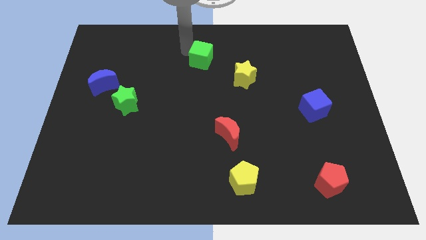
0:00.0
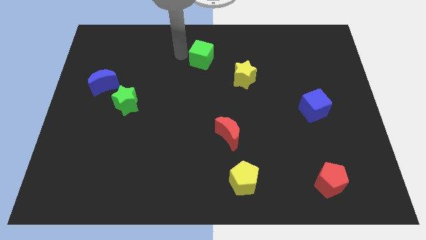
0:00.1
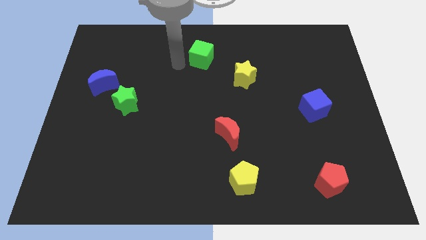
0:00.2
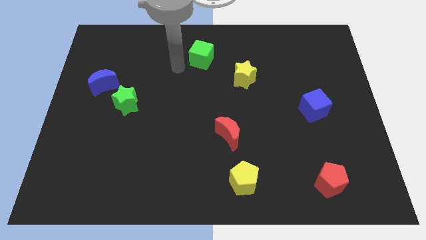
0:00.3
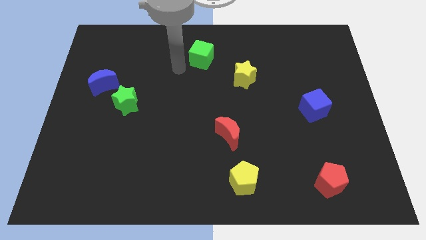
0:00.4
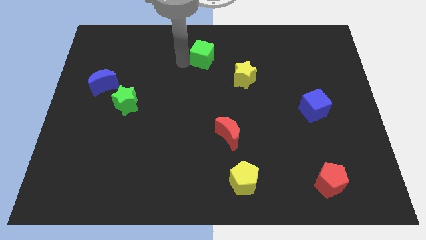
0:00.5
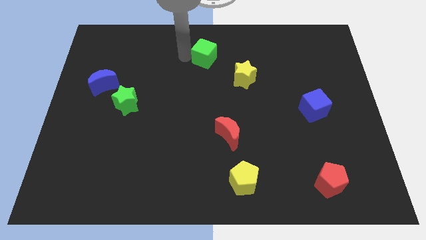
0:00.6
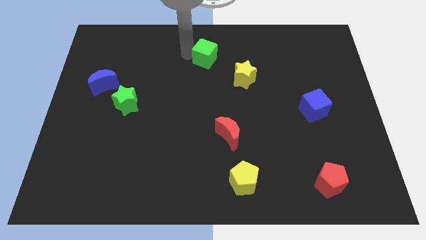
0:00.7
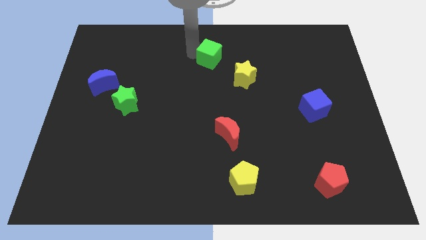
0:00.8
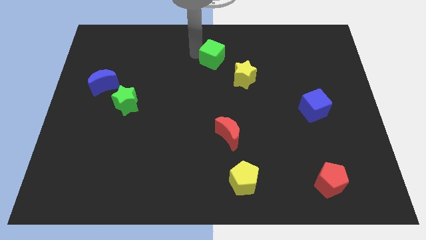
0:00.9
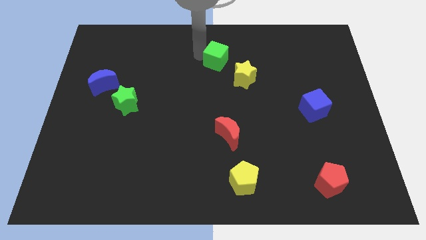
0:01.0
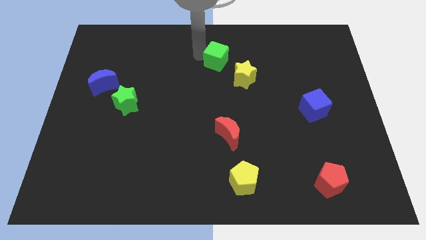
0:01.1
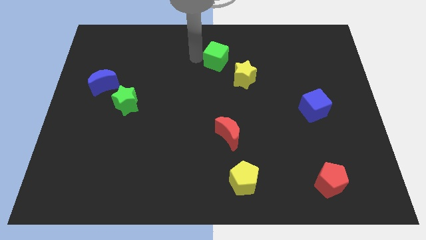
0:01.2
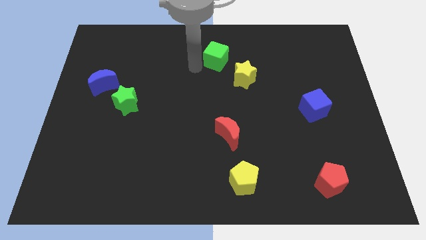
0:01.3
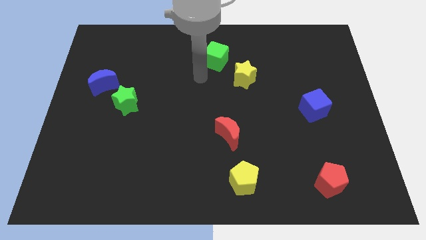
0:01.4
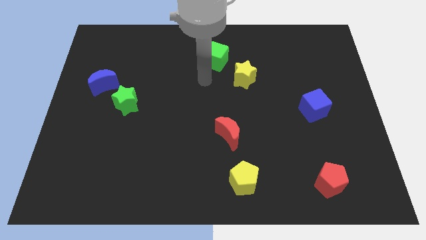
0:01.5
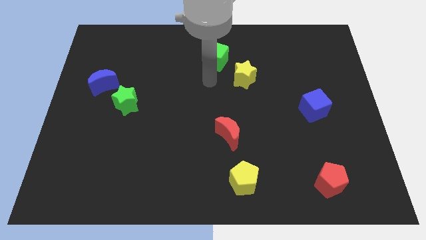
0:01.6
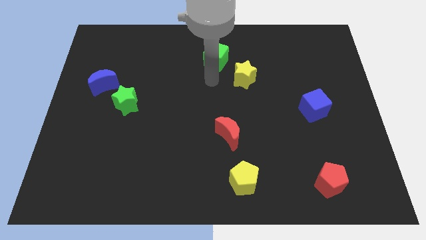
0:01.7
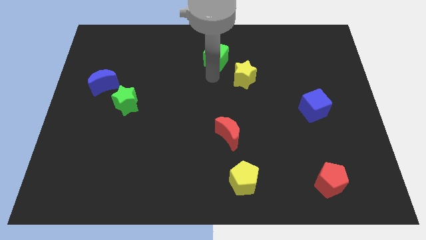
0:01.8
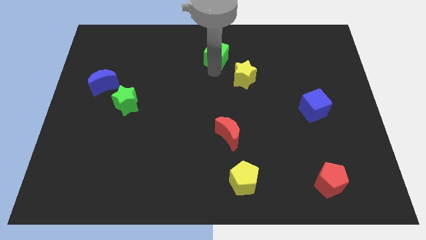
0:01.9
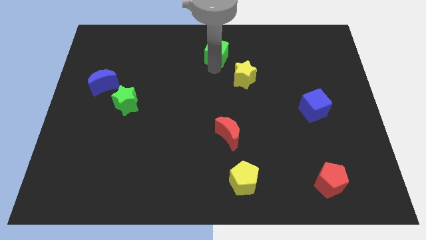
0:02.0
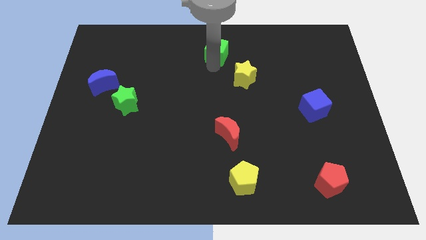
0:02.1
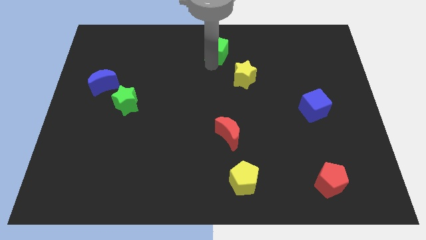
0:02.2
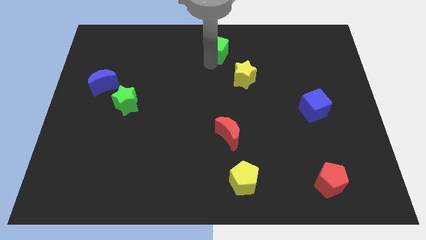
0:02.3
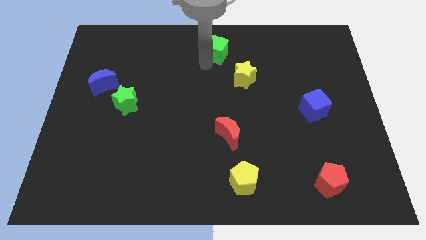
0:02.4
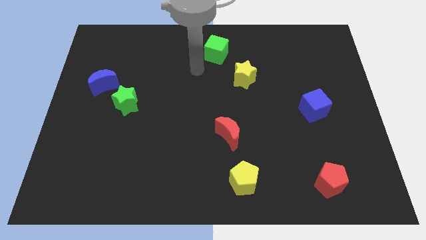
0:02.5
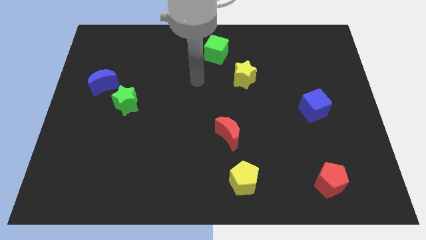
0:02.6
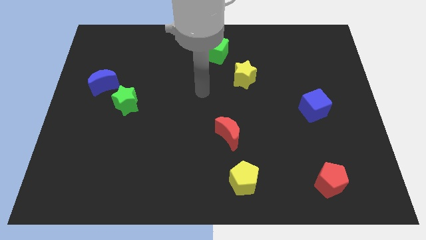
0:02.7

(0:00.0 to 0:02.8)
push the green cube towards the top center

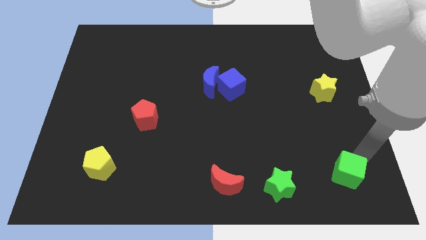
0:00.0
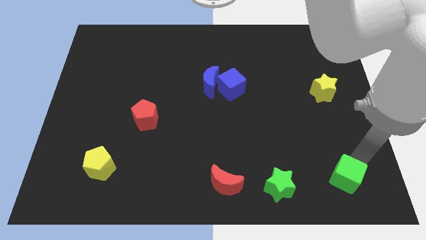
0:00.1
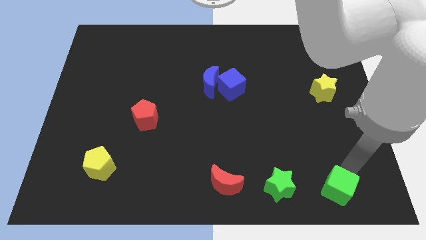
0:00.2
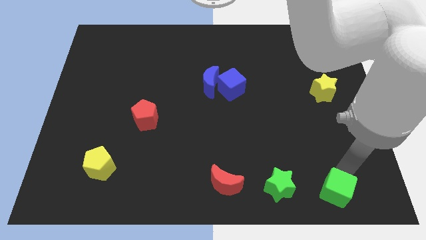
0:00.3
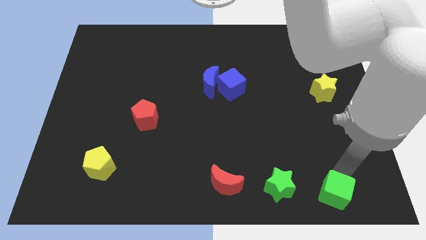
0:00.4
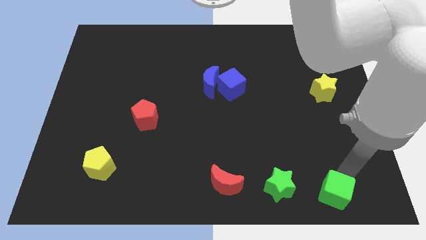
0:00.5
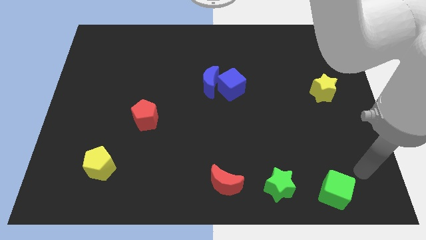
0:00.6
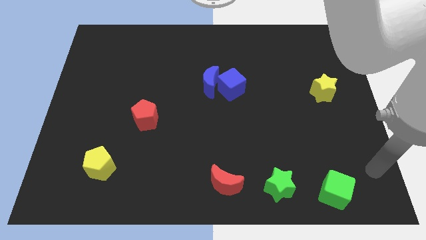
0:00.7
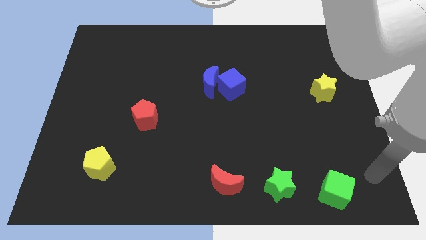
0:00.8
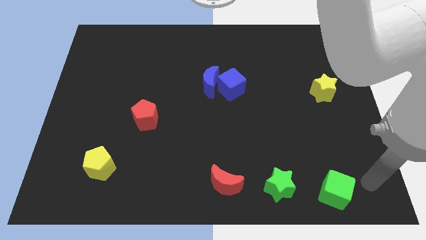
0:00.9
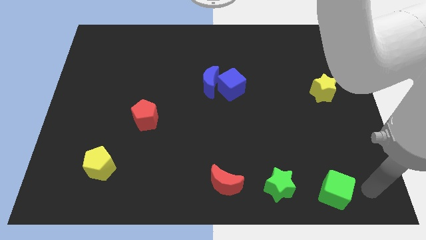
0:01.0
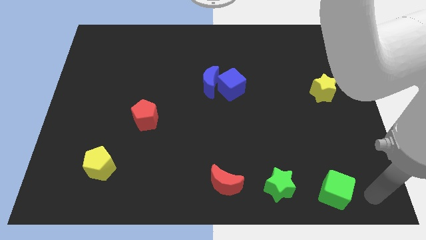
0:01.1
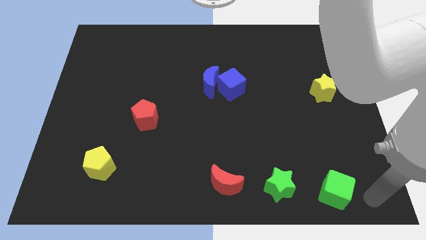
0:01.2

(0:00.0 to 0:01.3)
push green cube into the green star

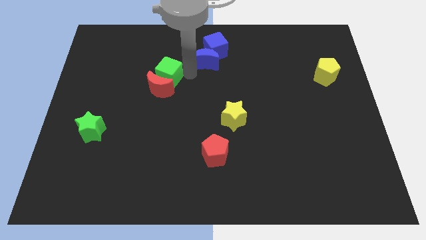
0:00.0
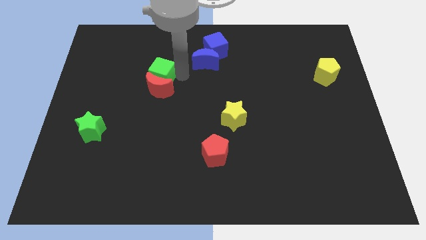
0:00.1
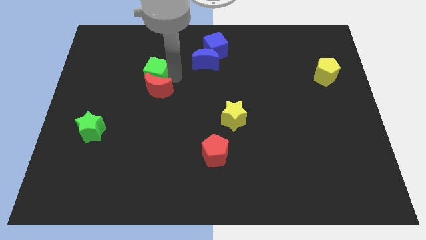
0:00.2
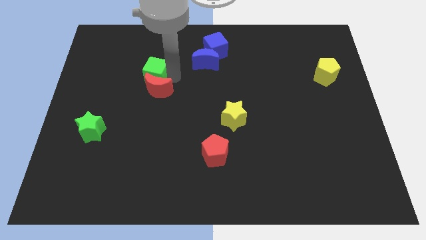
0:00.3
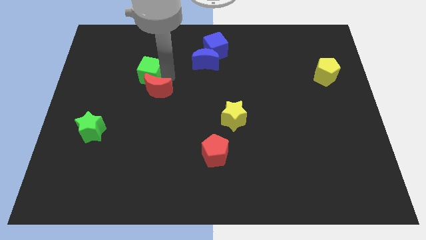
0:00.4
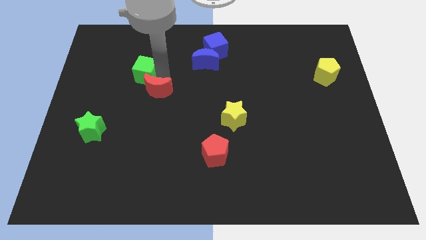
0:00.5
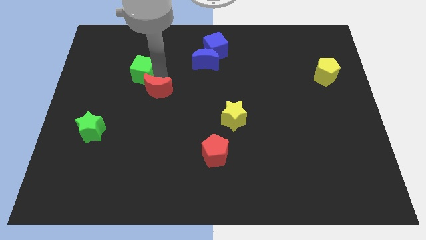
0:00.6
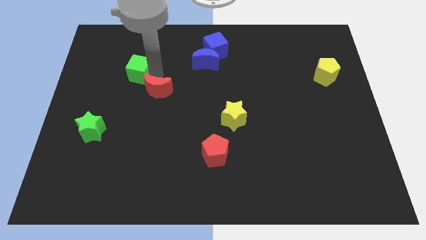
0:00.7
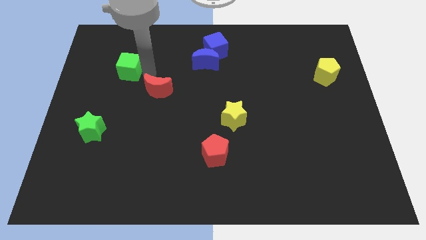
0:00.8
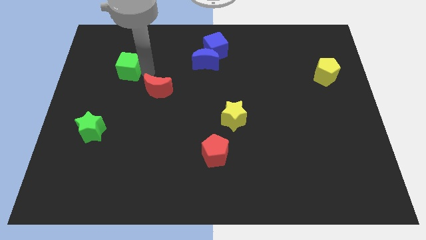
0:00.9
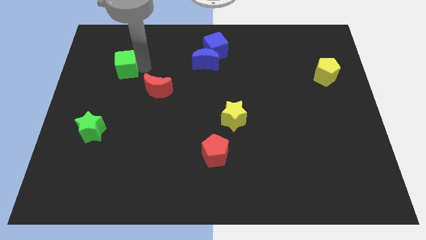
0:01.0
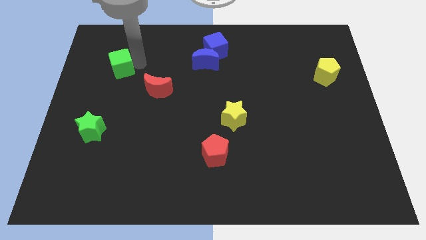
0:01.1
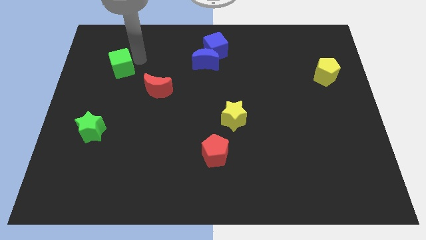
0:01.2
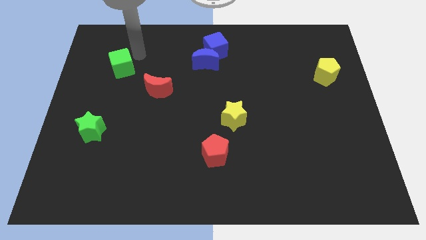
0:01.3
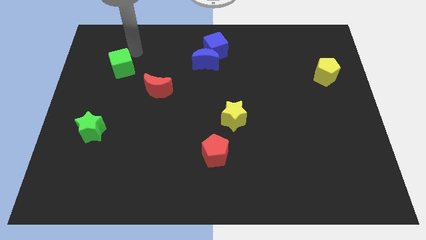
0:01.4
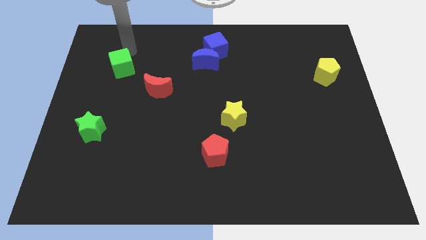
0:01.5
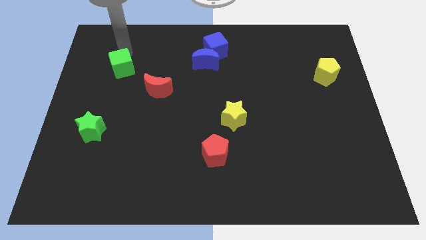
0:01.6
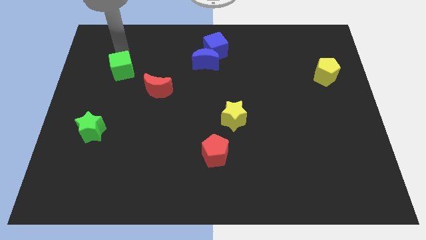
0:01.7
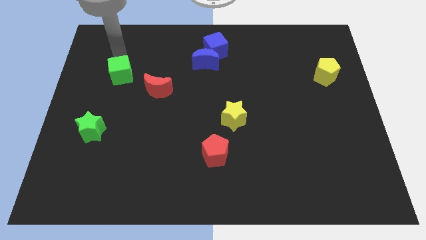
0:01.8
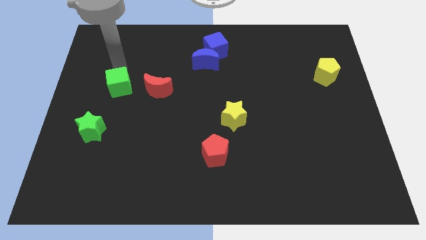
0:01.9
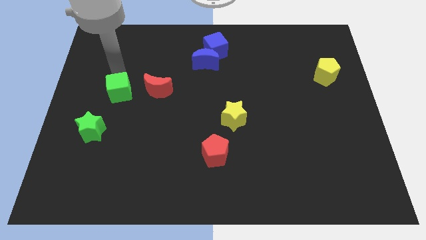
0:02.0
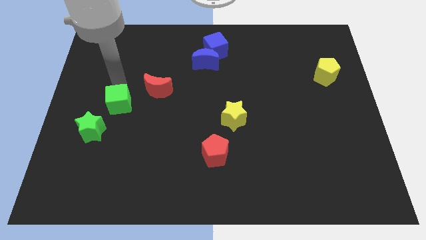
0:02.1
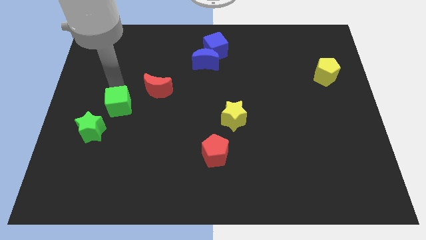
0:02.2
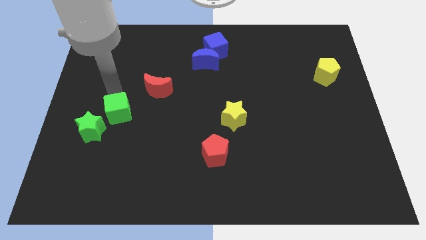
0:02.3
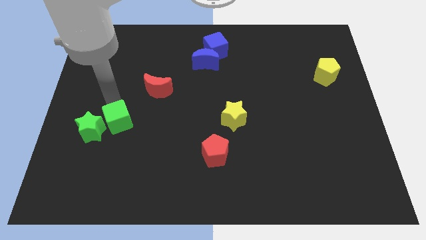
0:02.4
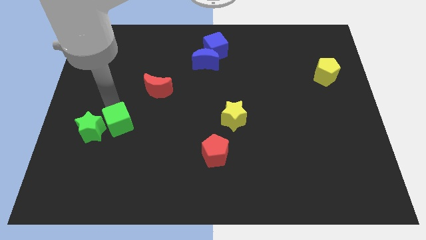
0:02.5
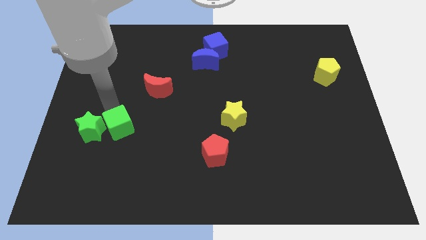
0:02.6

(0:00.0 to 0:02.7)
place the green cube to the right of the green star

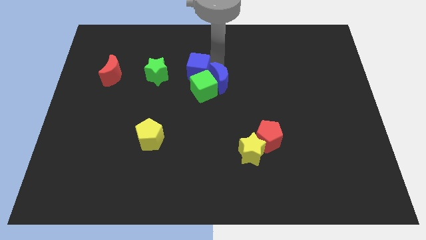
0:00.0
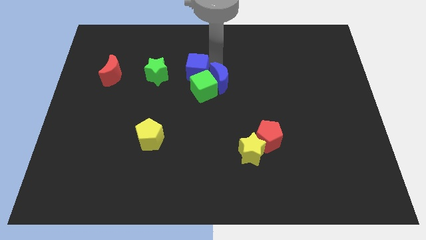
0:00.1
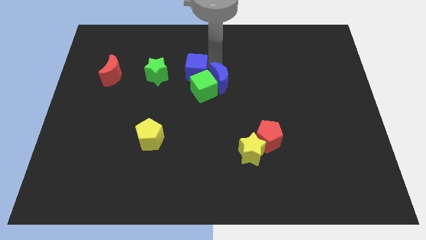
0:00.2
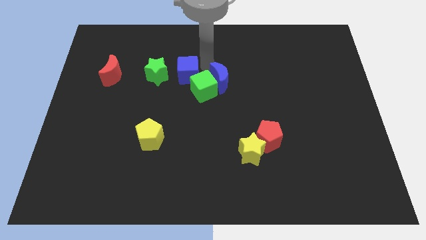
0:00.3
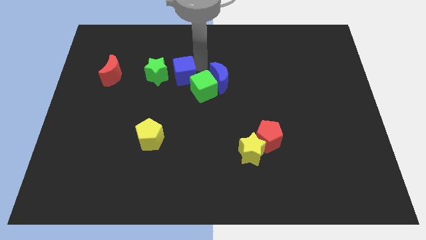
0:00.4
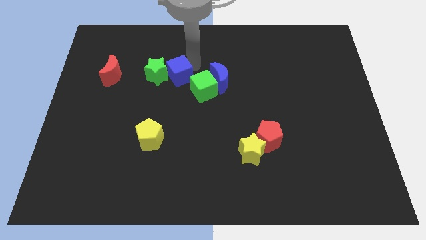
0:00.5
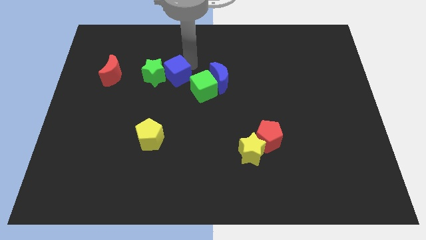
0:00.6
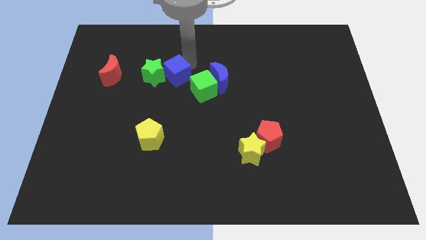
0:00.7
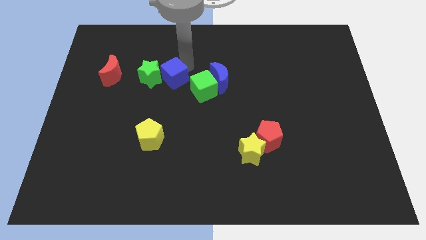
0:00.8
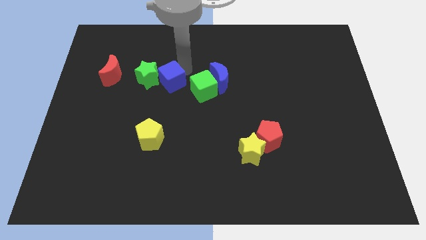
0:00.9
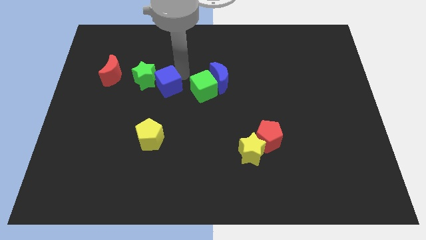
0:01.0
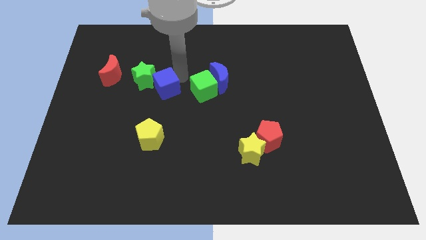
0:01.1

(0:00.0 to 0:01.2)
move blue cube into green star

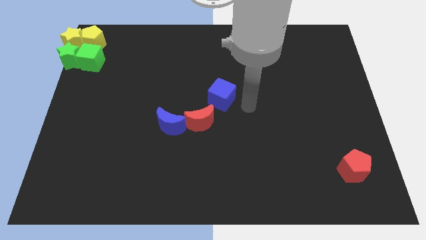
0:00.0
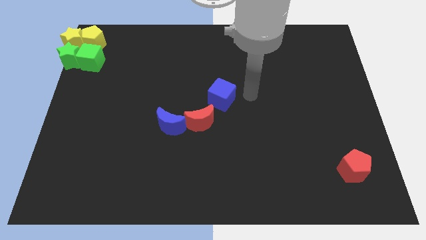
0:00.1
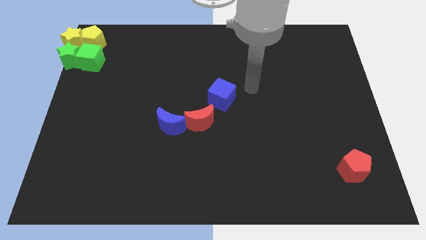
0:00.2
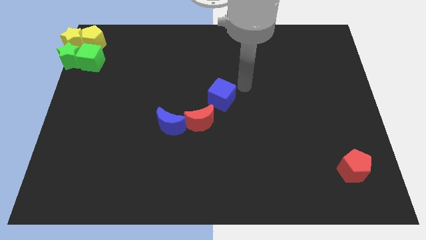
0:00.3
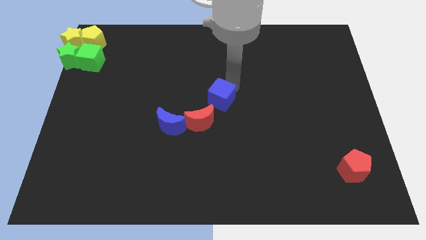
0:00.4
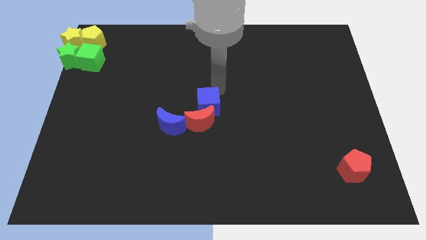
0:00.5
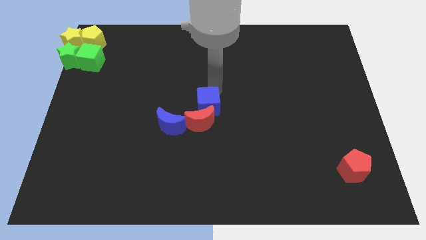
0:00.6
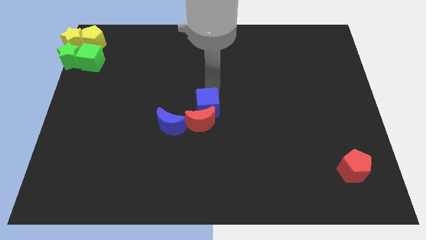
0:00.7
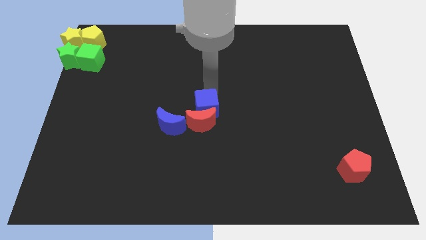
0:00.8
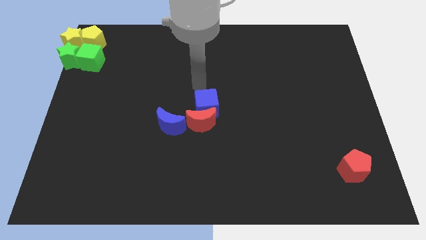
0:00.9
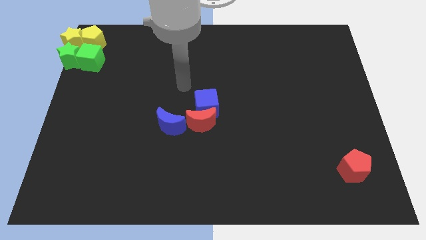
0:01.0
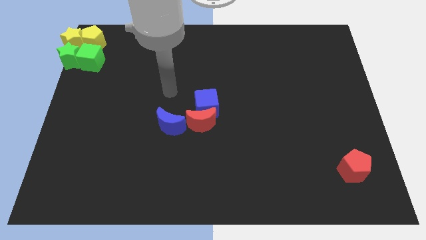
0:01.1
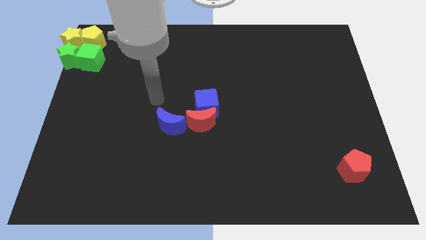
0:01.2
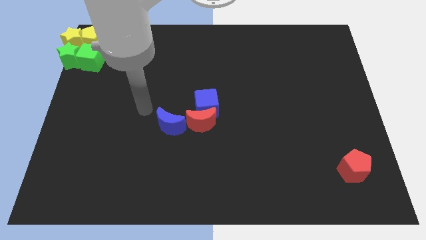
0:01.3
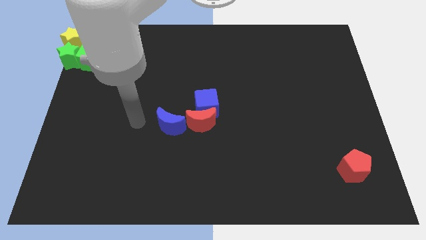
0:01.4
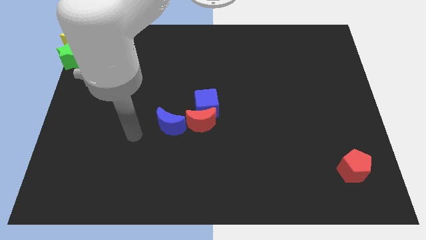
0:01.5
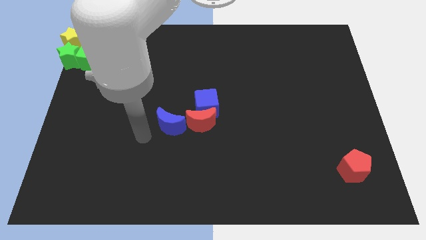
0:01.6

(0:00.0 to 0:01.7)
push the blue cube into the red crescent
